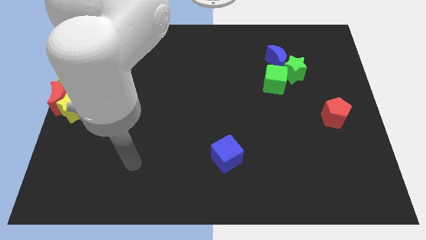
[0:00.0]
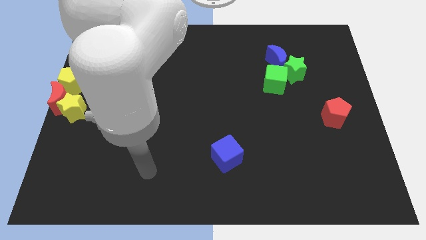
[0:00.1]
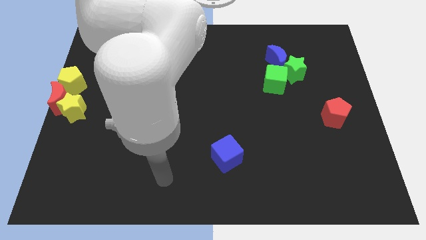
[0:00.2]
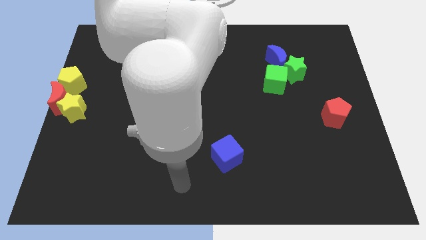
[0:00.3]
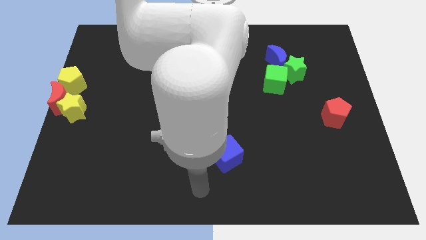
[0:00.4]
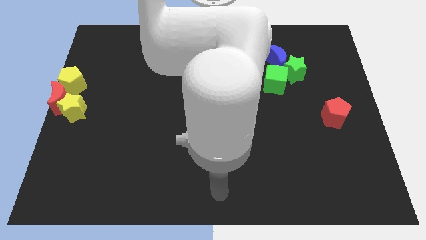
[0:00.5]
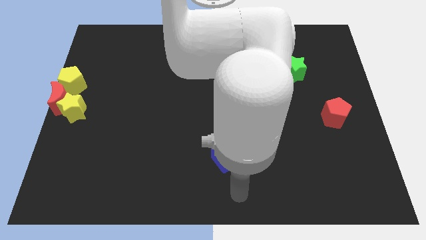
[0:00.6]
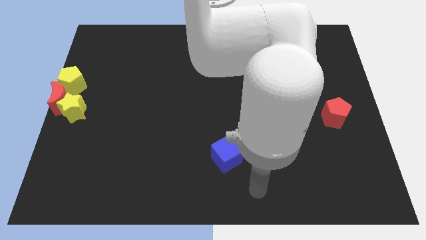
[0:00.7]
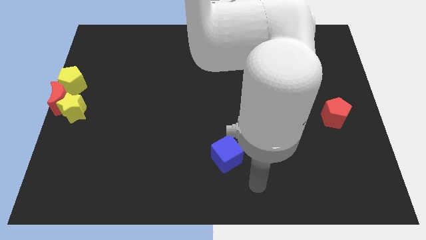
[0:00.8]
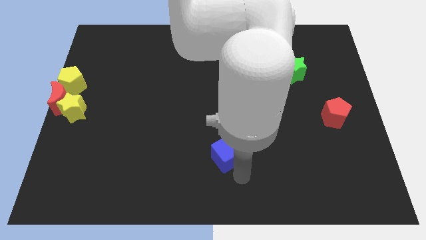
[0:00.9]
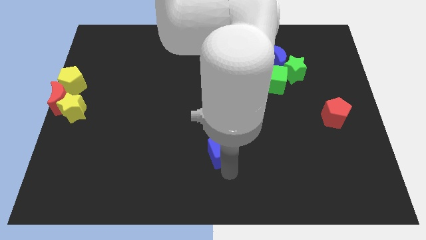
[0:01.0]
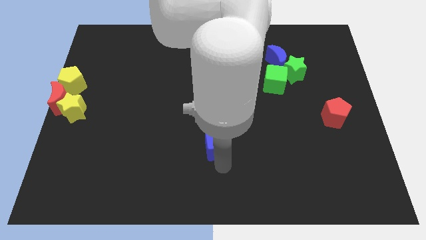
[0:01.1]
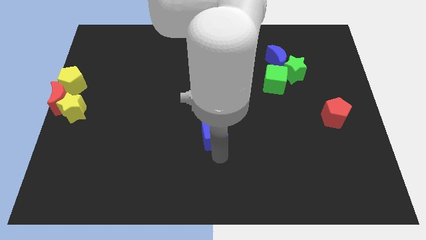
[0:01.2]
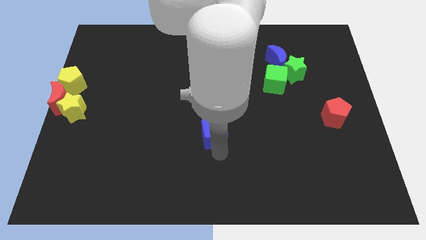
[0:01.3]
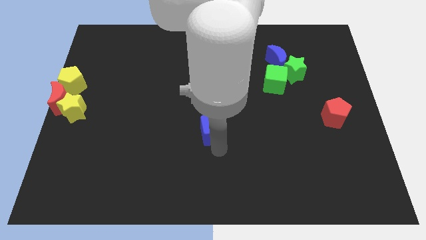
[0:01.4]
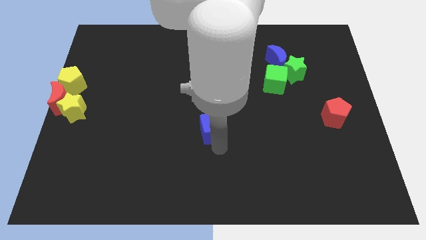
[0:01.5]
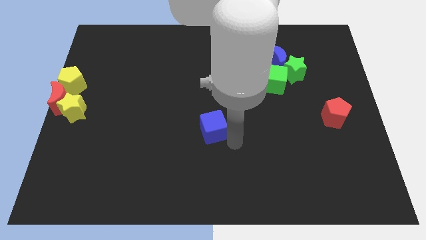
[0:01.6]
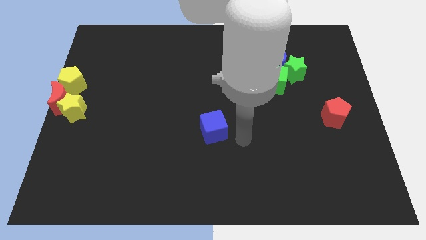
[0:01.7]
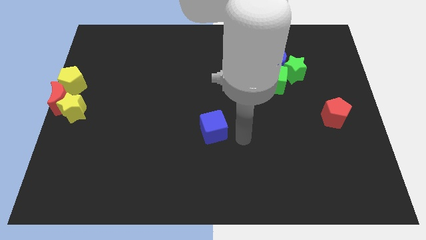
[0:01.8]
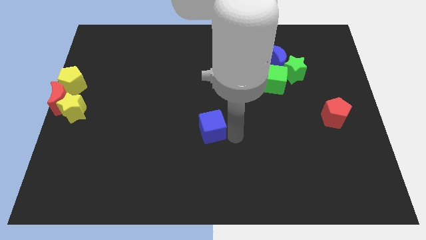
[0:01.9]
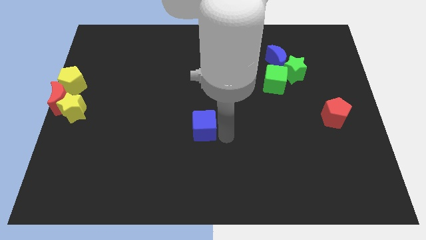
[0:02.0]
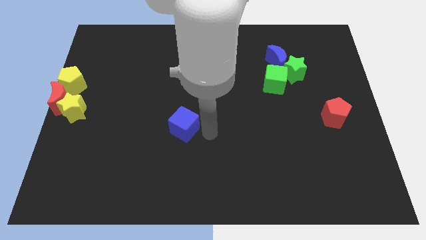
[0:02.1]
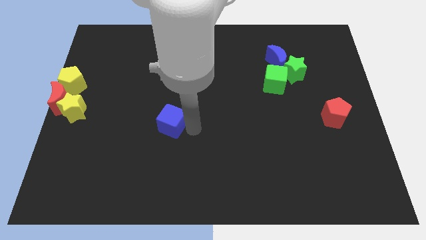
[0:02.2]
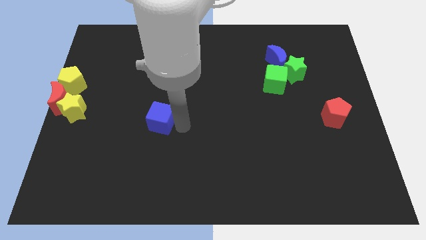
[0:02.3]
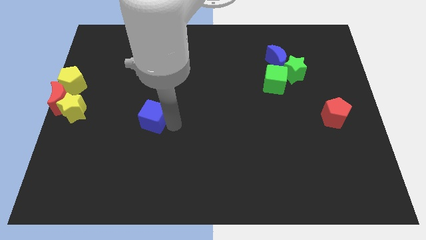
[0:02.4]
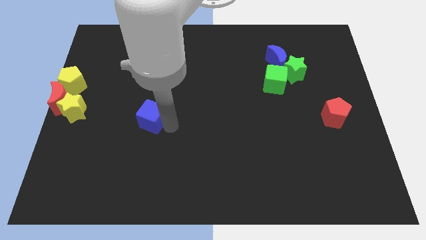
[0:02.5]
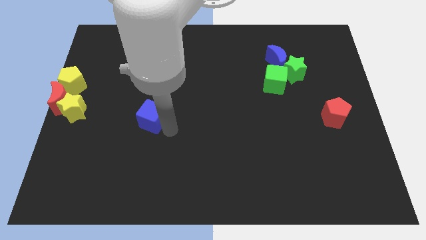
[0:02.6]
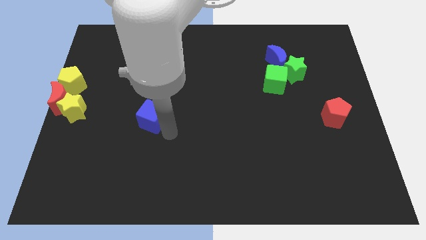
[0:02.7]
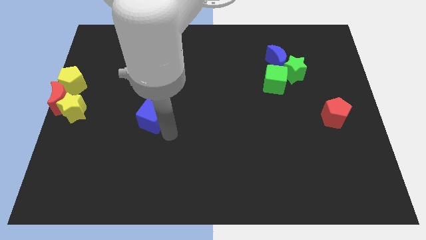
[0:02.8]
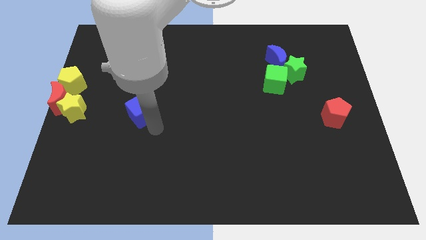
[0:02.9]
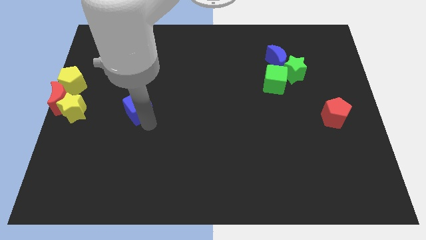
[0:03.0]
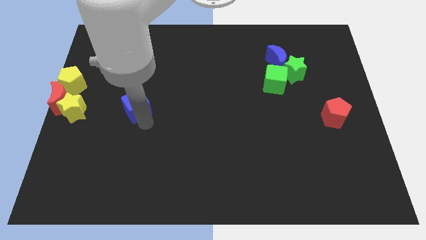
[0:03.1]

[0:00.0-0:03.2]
move the blue cube right to the yellow star

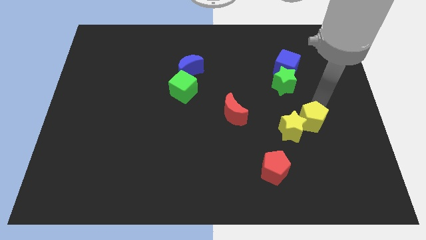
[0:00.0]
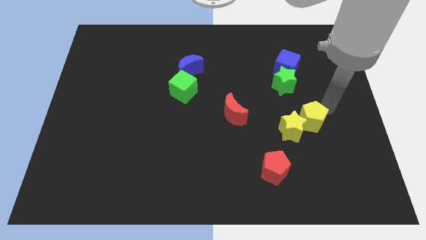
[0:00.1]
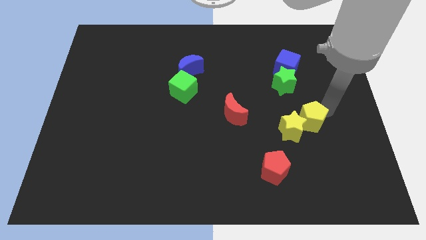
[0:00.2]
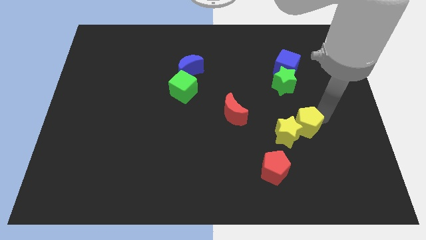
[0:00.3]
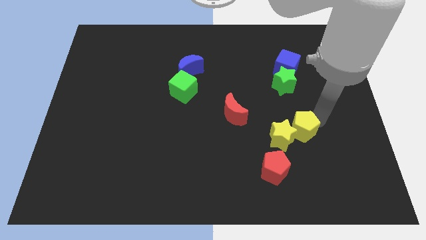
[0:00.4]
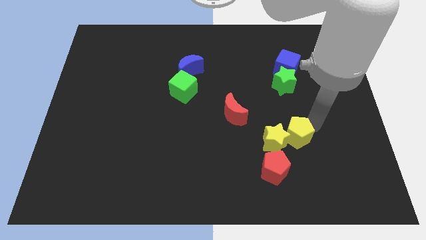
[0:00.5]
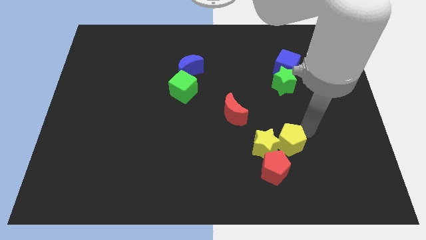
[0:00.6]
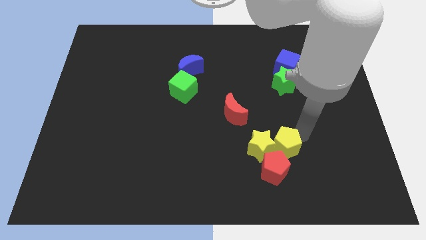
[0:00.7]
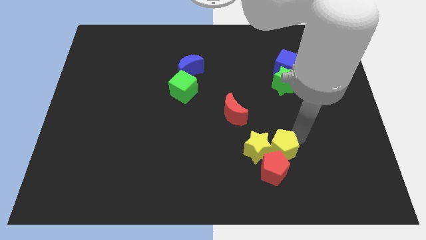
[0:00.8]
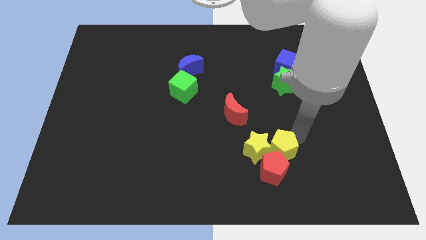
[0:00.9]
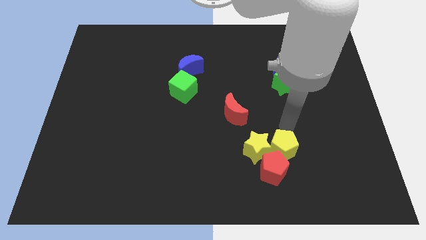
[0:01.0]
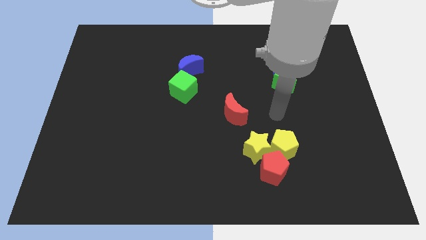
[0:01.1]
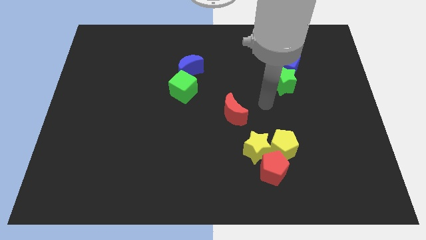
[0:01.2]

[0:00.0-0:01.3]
push the yellow star with the yellow pentagon

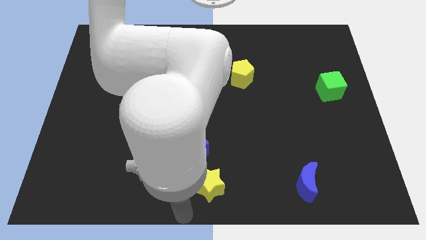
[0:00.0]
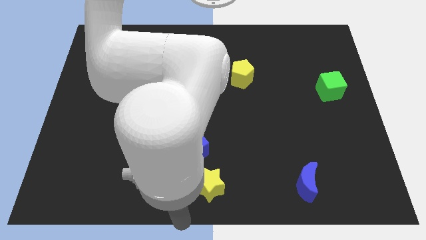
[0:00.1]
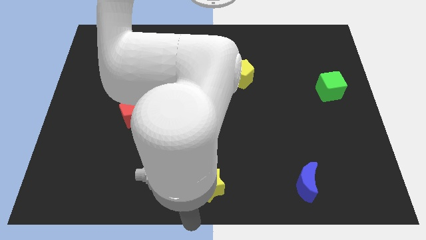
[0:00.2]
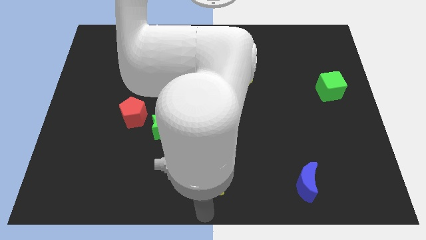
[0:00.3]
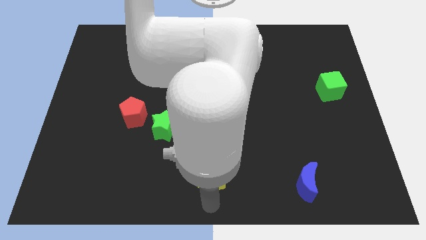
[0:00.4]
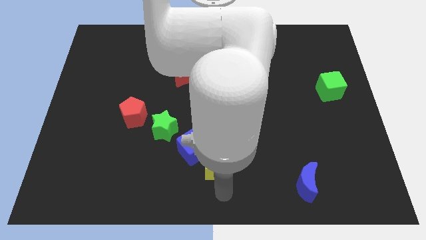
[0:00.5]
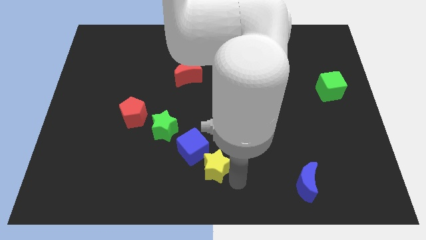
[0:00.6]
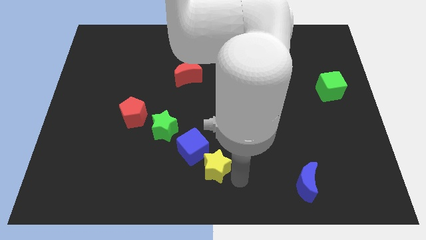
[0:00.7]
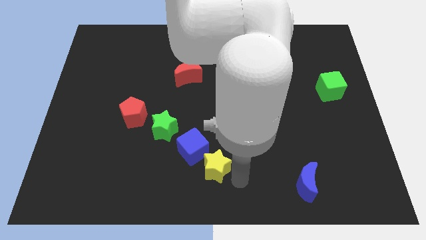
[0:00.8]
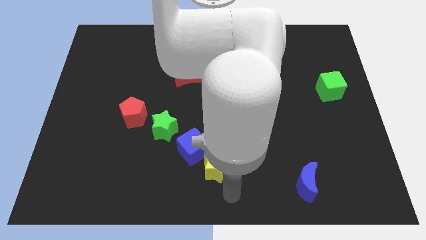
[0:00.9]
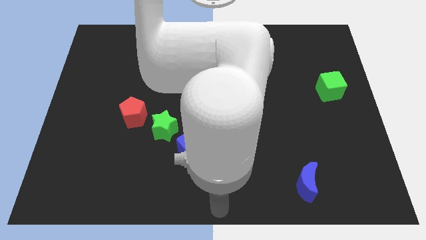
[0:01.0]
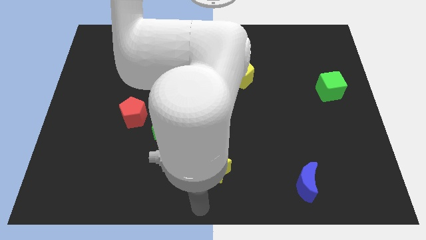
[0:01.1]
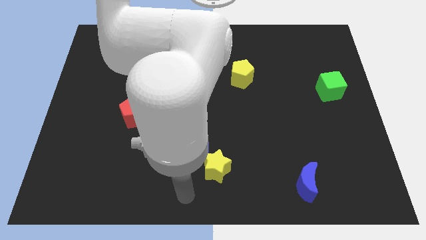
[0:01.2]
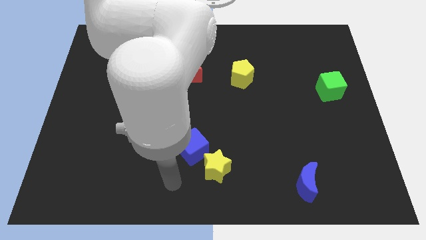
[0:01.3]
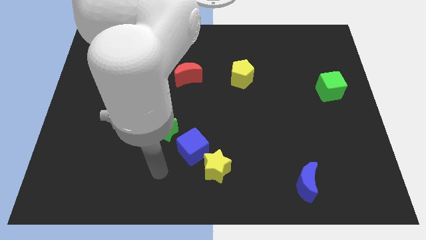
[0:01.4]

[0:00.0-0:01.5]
move the yellow star into the blue cube

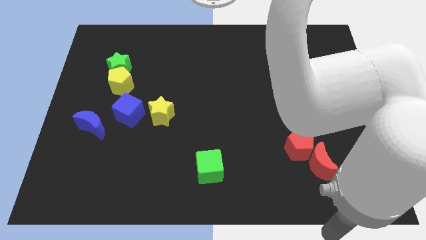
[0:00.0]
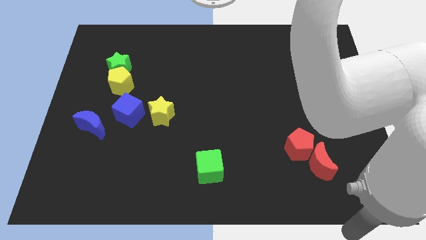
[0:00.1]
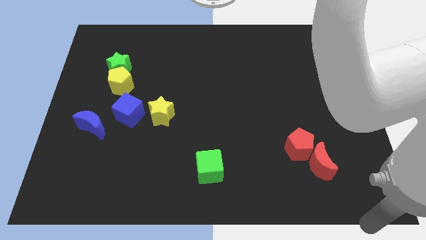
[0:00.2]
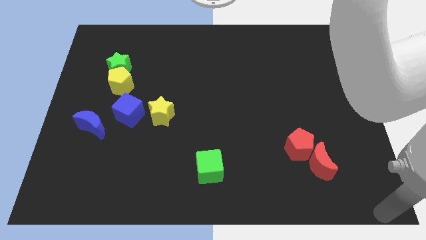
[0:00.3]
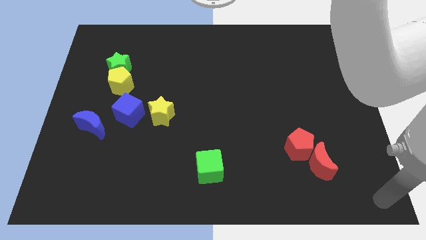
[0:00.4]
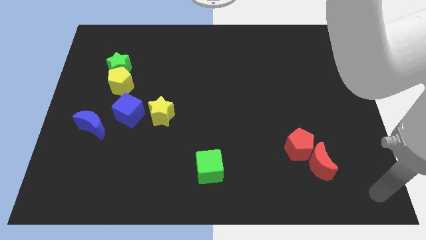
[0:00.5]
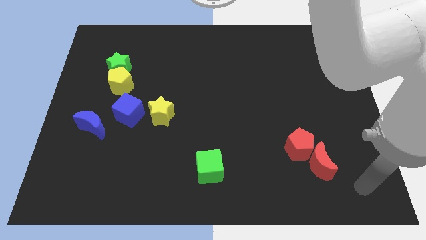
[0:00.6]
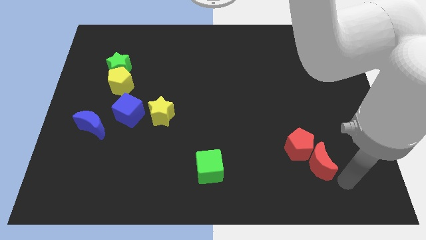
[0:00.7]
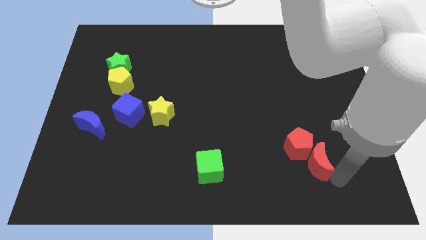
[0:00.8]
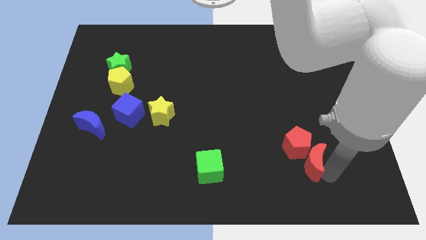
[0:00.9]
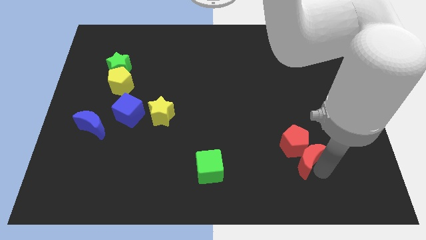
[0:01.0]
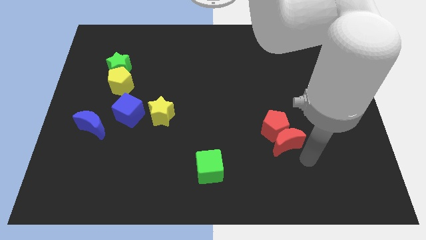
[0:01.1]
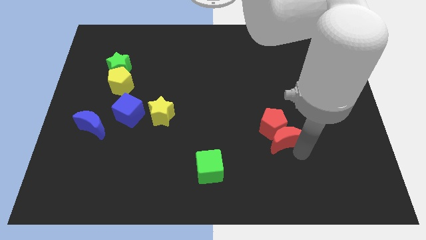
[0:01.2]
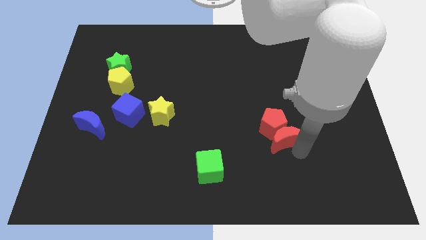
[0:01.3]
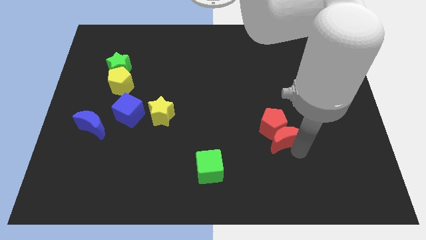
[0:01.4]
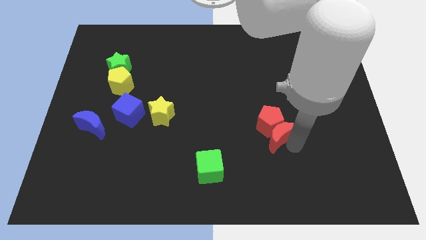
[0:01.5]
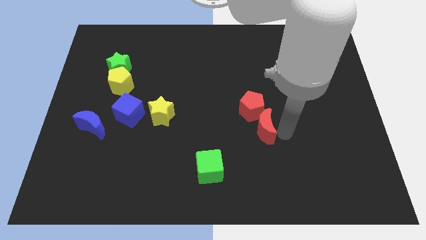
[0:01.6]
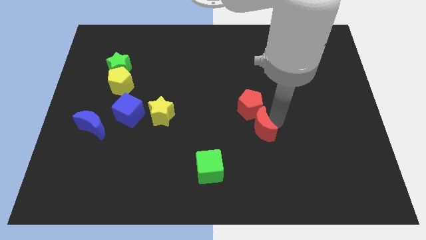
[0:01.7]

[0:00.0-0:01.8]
move the red moon into the red pentagon

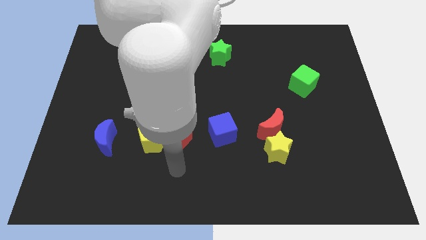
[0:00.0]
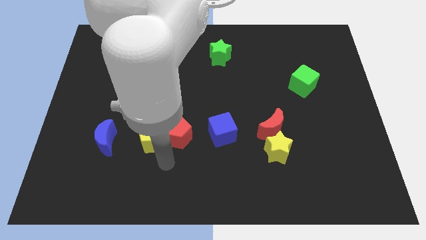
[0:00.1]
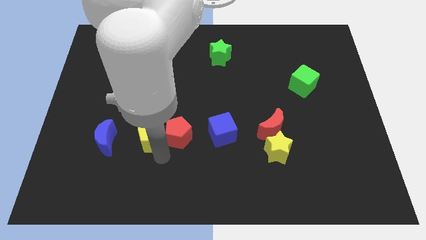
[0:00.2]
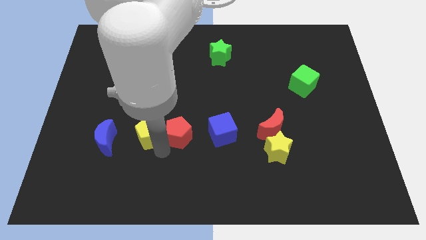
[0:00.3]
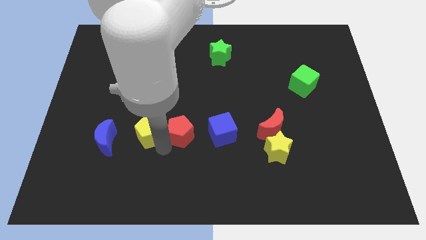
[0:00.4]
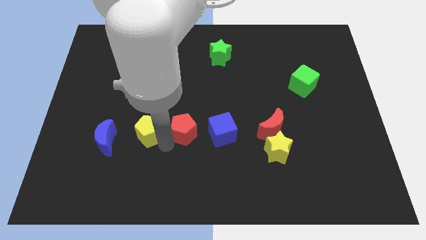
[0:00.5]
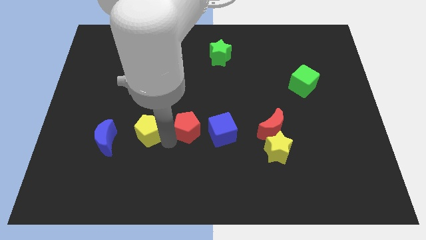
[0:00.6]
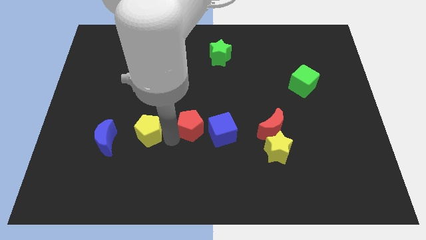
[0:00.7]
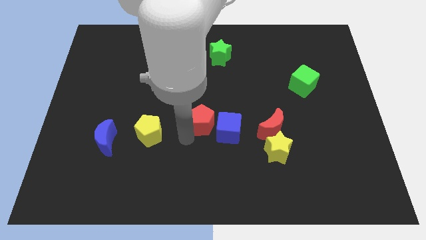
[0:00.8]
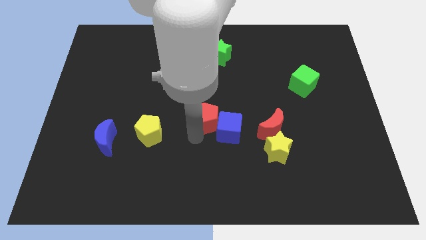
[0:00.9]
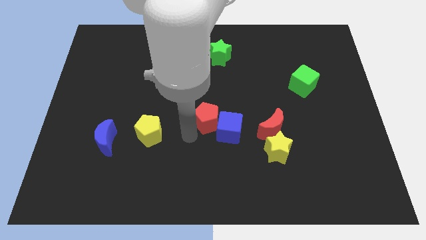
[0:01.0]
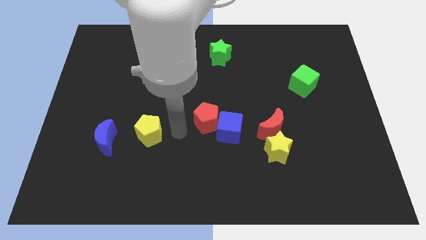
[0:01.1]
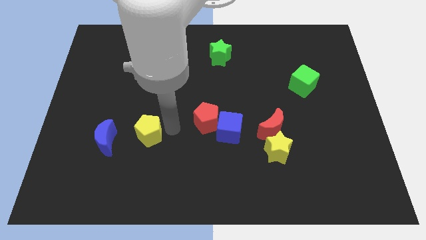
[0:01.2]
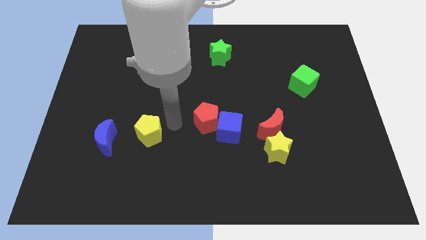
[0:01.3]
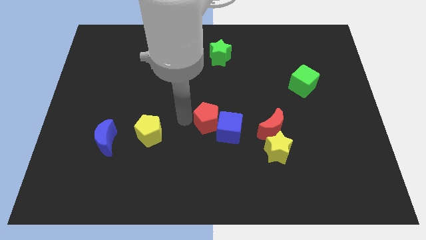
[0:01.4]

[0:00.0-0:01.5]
push the red pentagon into blue cube
